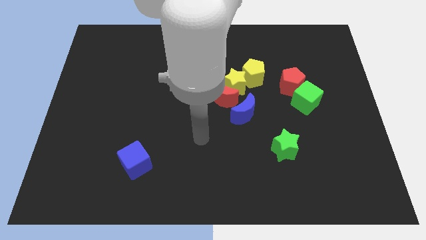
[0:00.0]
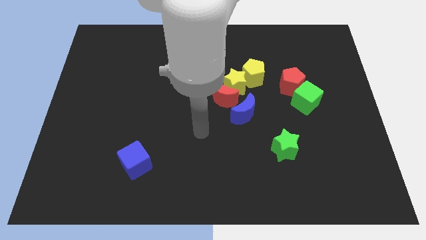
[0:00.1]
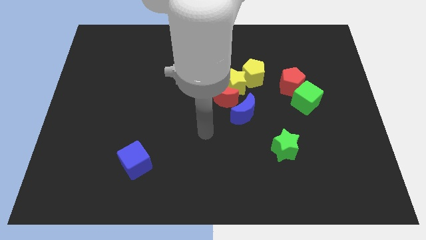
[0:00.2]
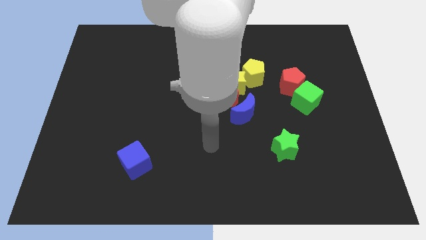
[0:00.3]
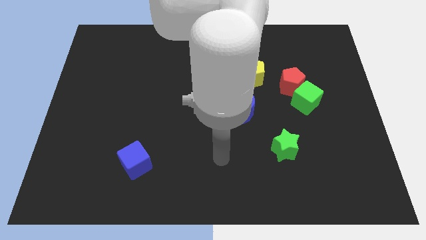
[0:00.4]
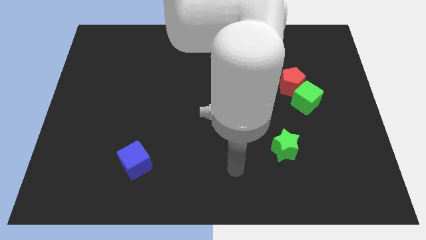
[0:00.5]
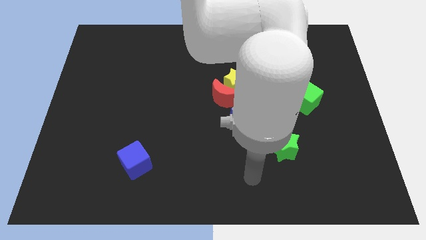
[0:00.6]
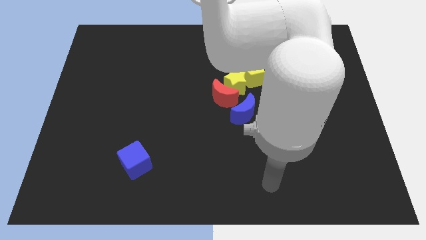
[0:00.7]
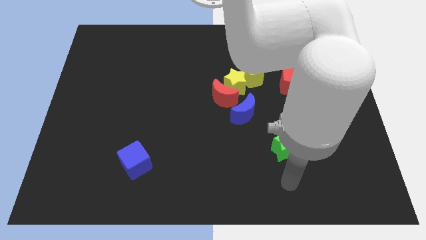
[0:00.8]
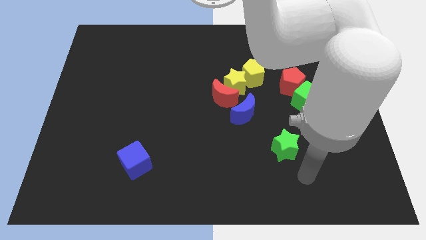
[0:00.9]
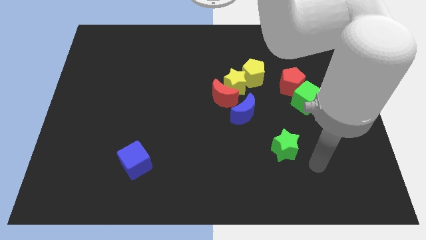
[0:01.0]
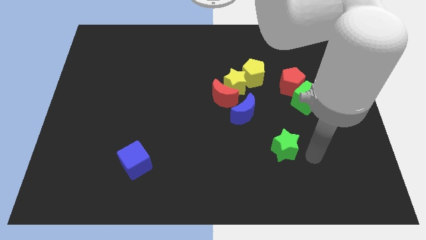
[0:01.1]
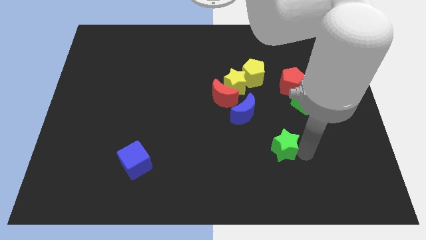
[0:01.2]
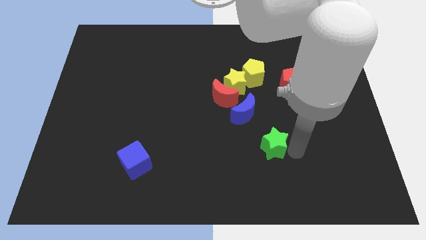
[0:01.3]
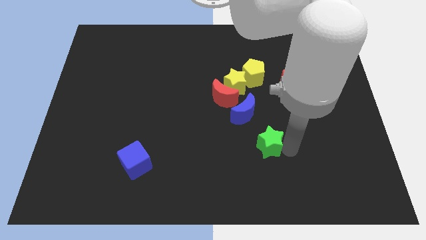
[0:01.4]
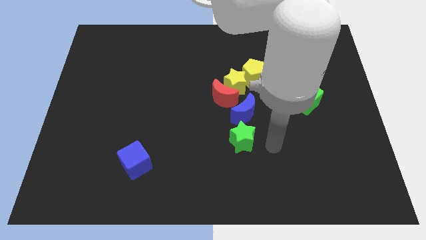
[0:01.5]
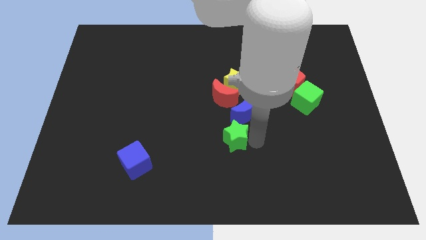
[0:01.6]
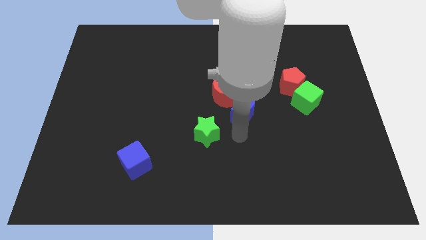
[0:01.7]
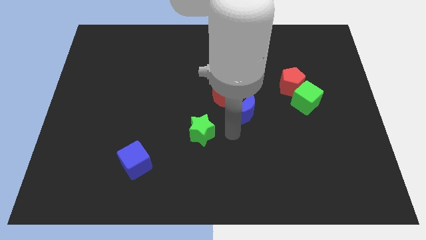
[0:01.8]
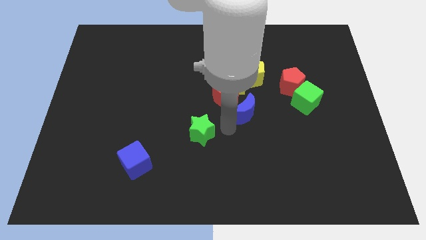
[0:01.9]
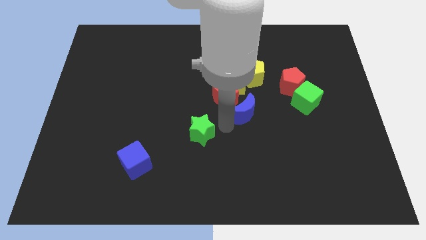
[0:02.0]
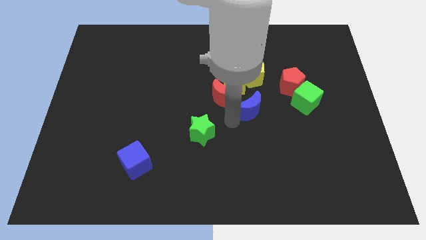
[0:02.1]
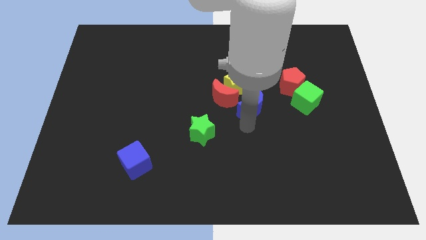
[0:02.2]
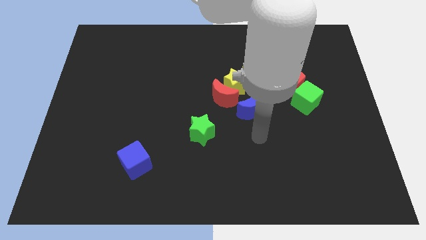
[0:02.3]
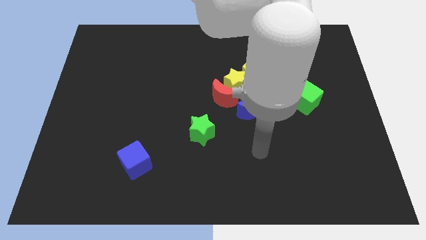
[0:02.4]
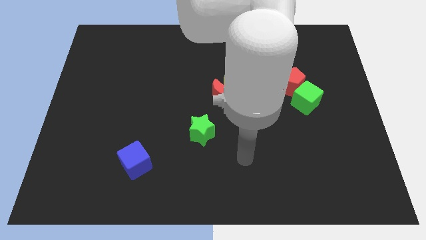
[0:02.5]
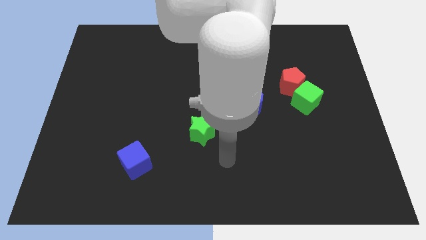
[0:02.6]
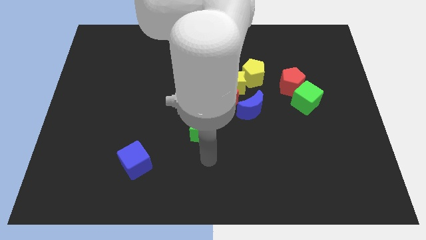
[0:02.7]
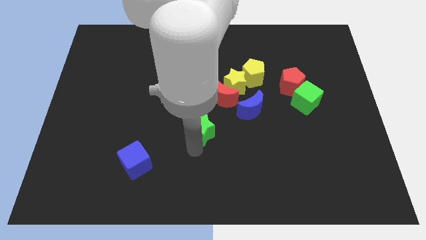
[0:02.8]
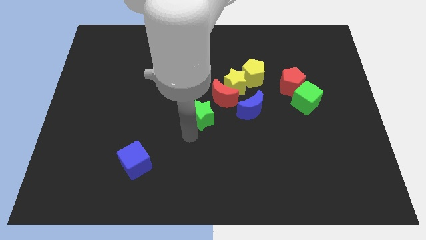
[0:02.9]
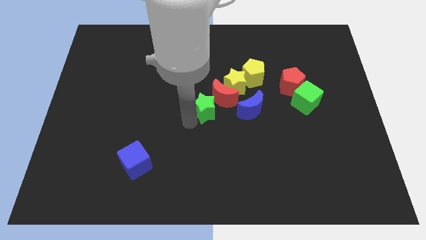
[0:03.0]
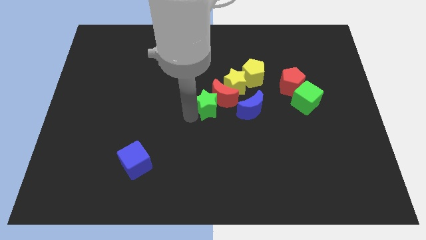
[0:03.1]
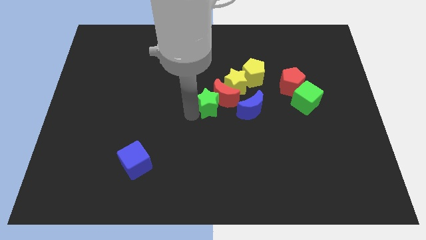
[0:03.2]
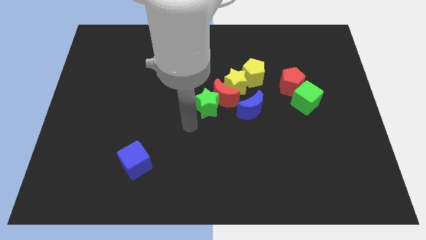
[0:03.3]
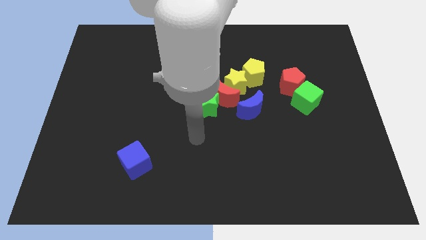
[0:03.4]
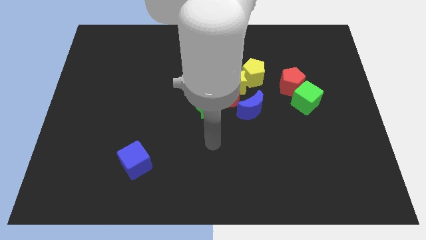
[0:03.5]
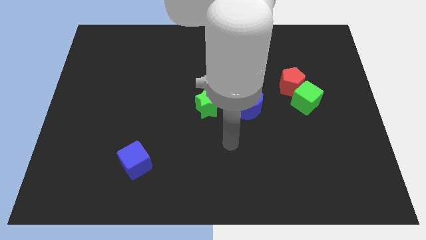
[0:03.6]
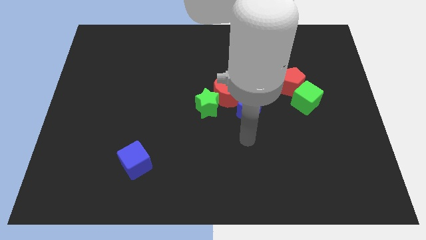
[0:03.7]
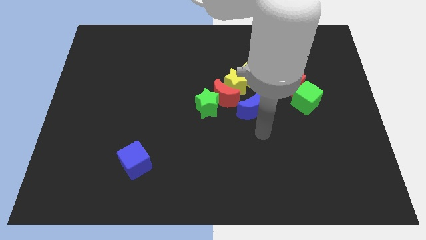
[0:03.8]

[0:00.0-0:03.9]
move the green star into the red crescent

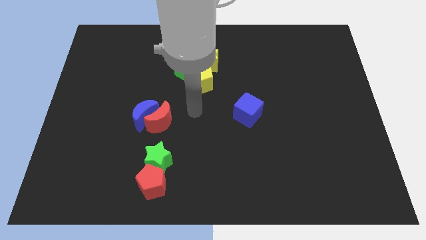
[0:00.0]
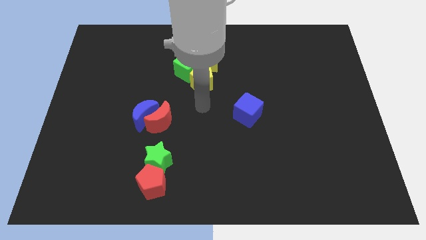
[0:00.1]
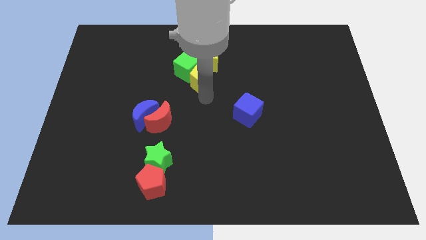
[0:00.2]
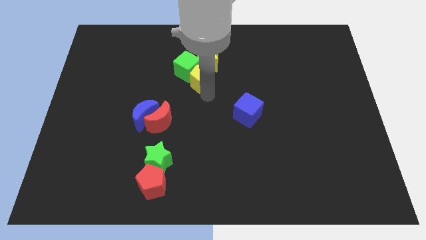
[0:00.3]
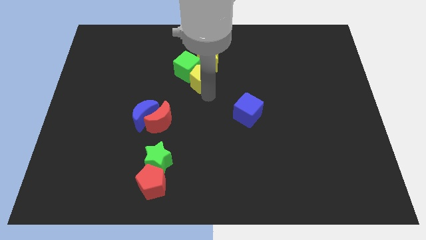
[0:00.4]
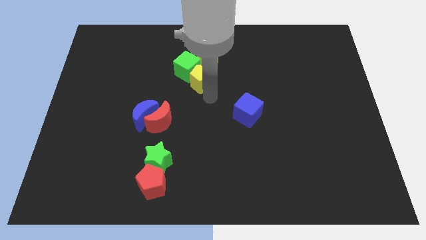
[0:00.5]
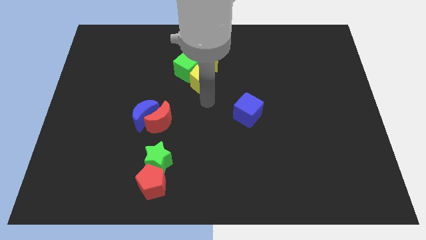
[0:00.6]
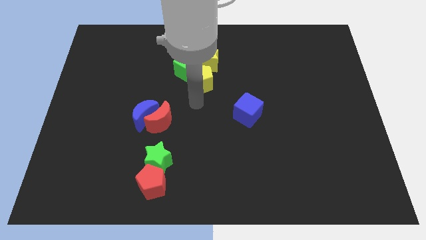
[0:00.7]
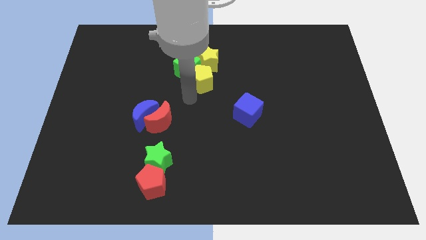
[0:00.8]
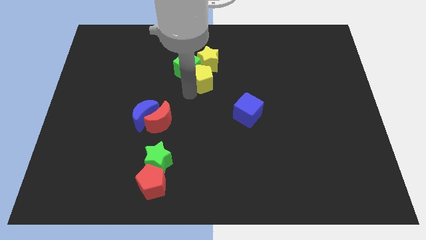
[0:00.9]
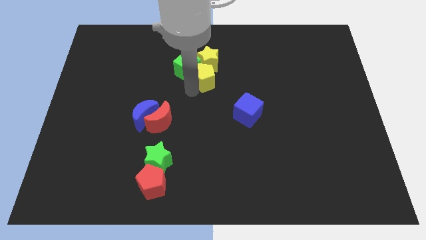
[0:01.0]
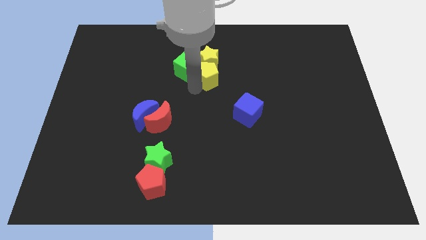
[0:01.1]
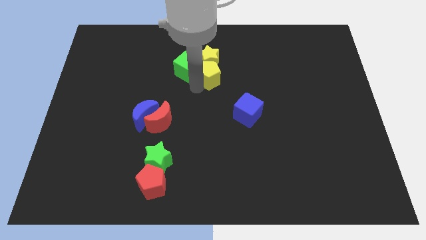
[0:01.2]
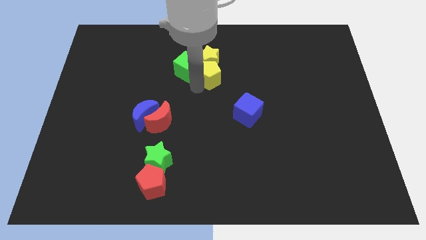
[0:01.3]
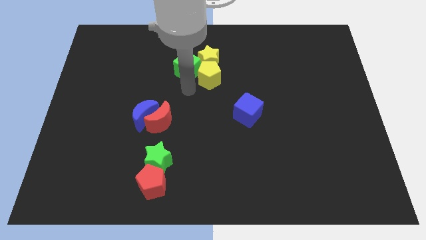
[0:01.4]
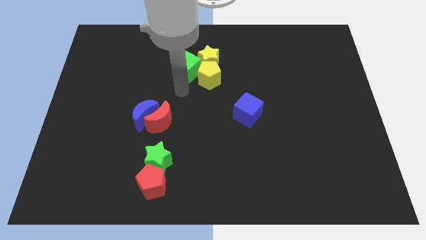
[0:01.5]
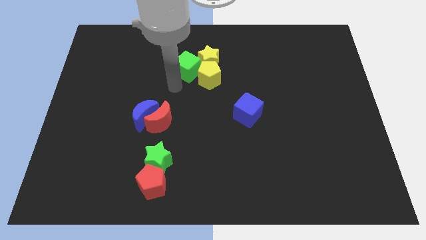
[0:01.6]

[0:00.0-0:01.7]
slide the yellow pentagon into the yellow star

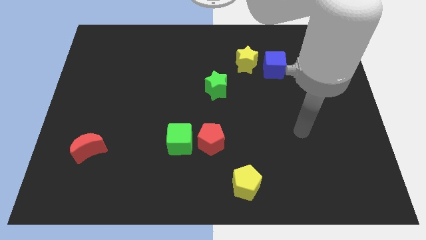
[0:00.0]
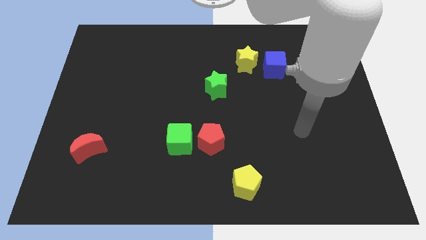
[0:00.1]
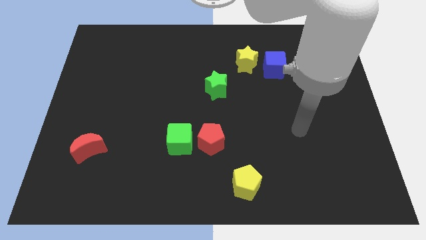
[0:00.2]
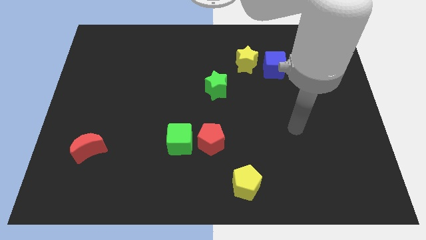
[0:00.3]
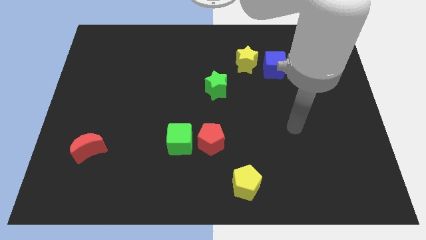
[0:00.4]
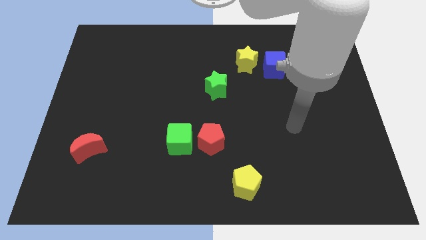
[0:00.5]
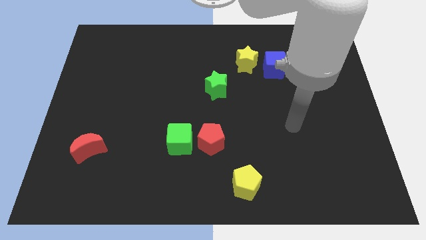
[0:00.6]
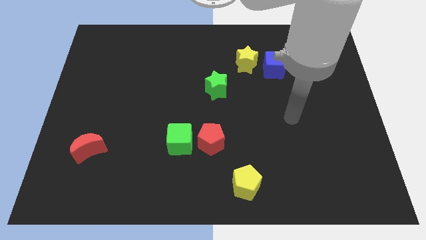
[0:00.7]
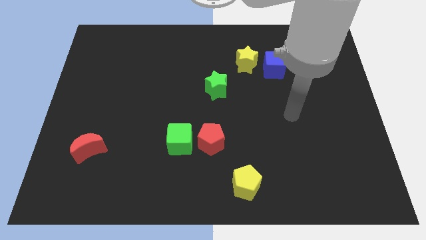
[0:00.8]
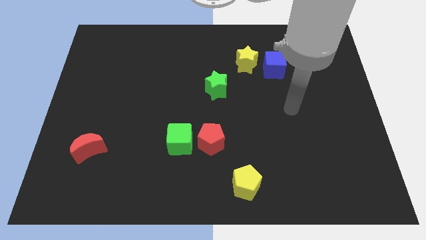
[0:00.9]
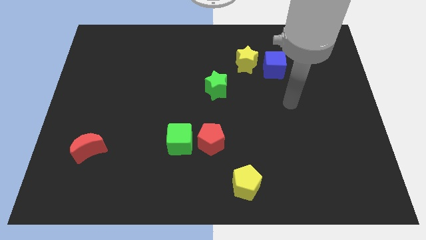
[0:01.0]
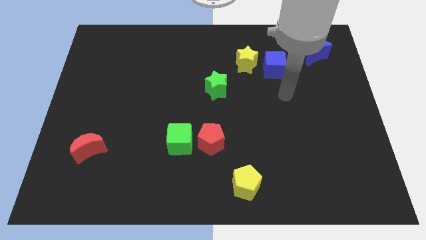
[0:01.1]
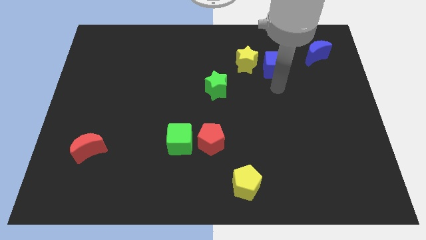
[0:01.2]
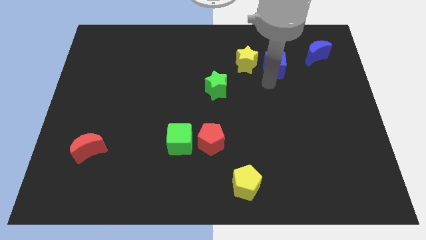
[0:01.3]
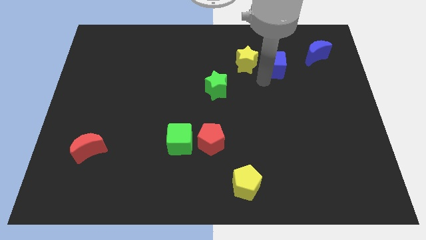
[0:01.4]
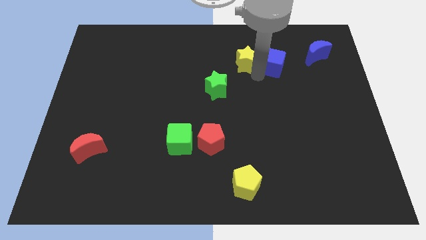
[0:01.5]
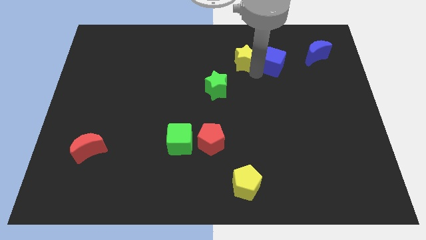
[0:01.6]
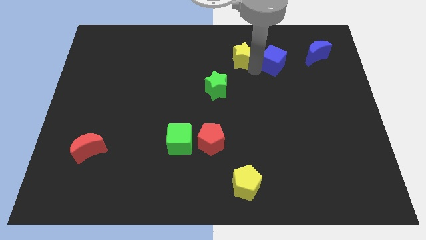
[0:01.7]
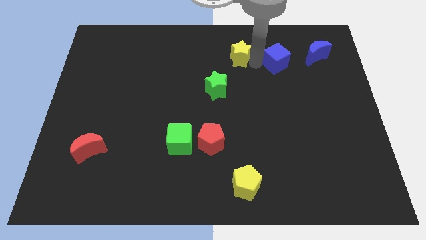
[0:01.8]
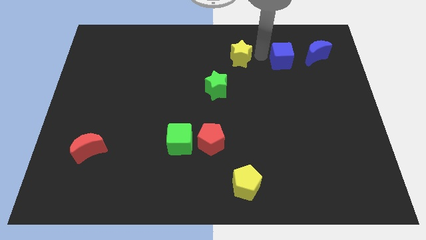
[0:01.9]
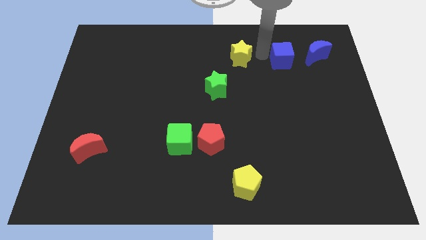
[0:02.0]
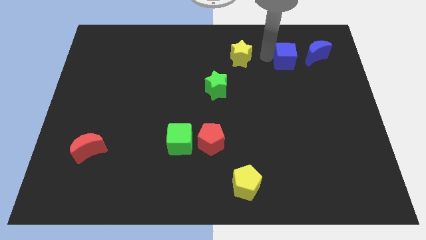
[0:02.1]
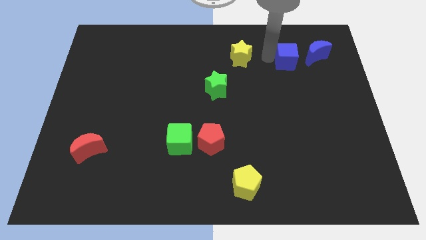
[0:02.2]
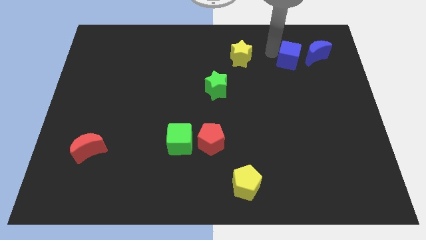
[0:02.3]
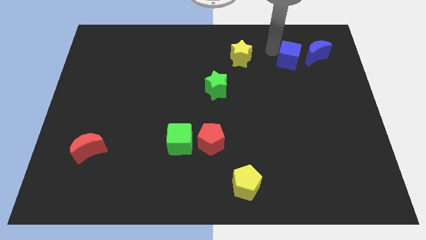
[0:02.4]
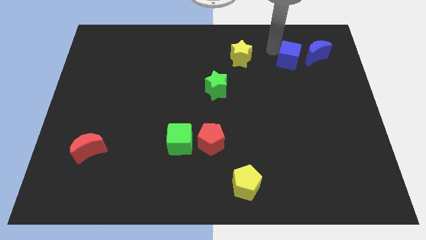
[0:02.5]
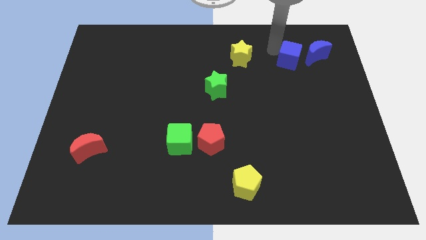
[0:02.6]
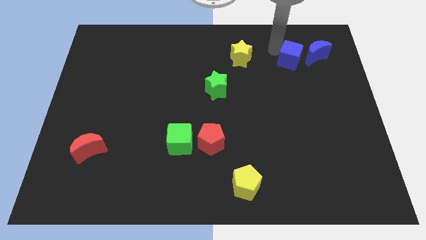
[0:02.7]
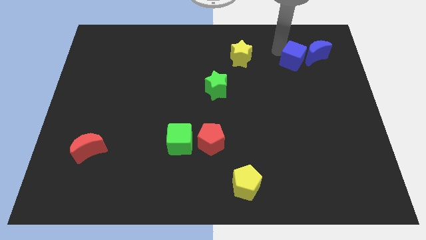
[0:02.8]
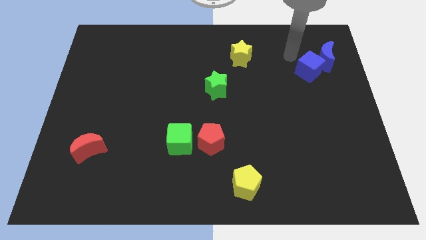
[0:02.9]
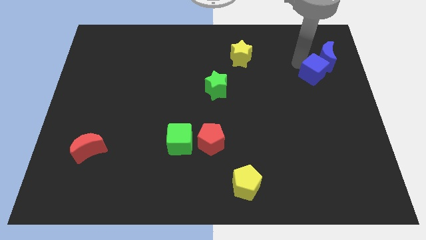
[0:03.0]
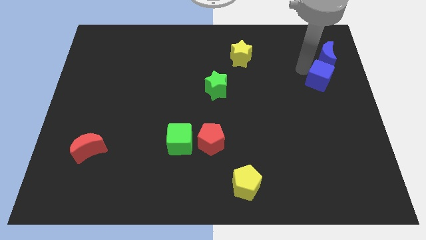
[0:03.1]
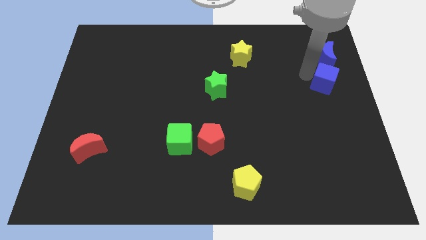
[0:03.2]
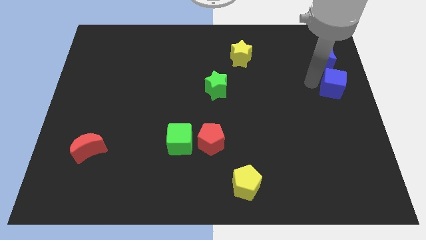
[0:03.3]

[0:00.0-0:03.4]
move the blue cube to the bottom side of the blue crescent
